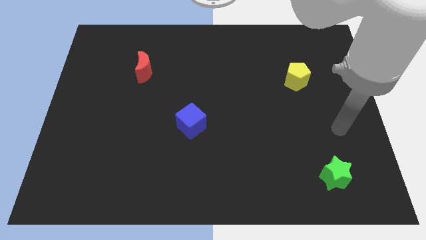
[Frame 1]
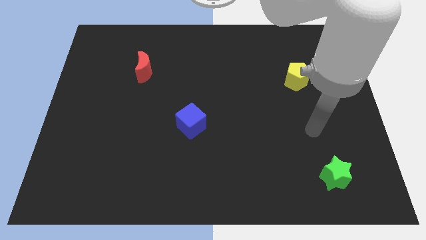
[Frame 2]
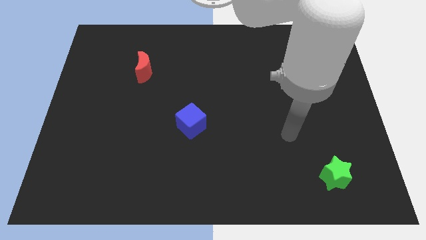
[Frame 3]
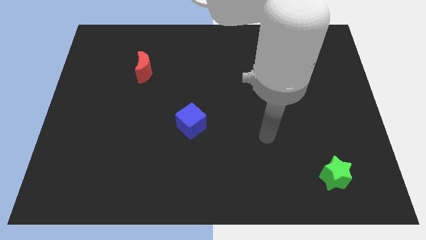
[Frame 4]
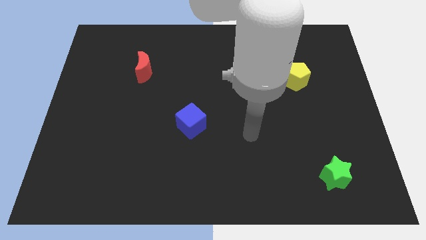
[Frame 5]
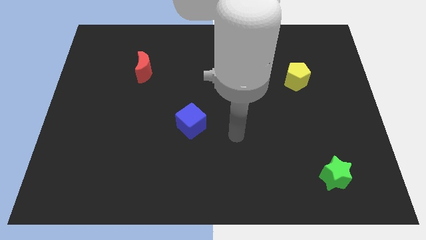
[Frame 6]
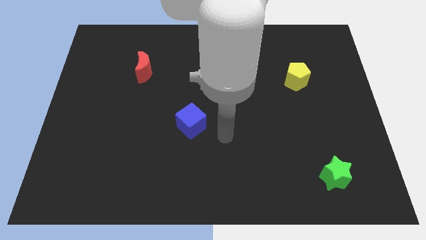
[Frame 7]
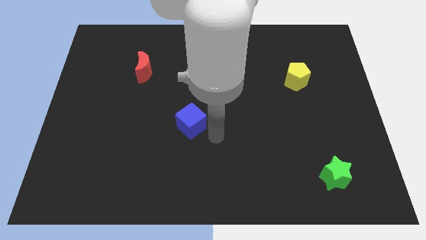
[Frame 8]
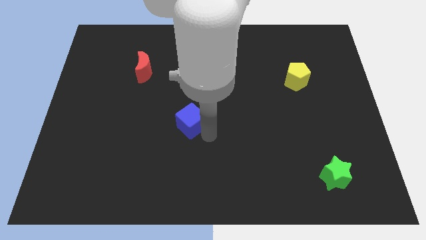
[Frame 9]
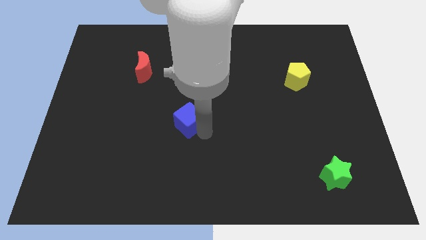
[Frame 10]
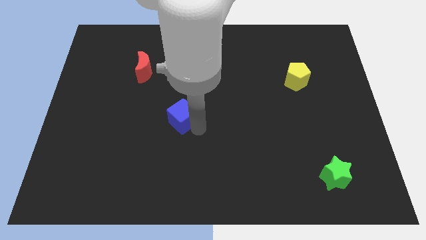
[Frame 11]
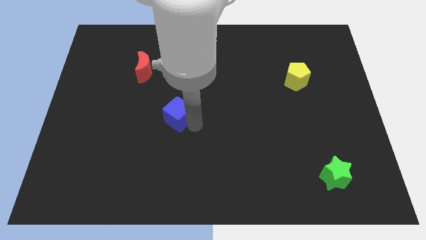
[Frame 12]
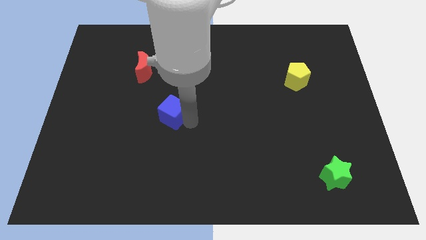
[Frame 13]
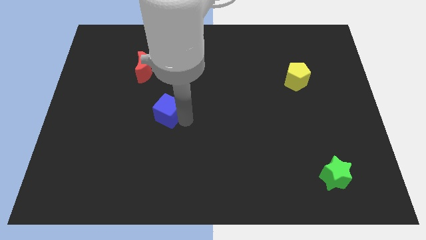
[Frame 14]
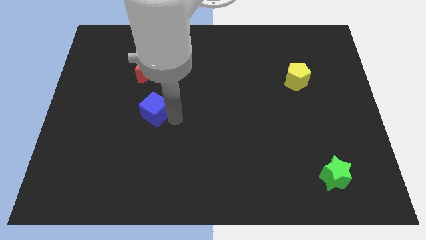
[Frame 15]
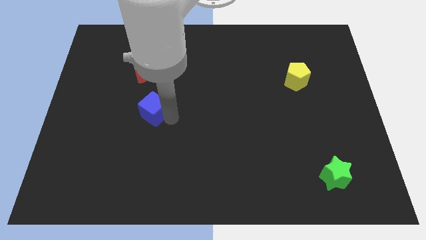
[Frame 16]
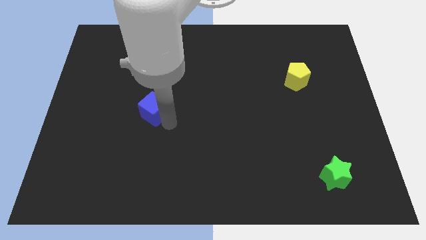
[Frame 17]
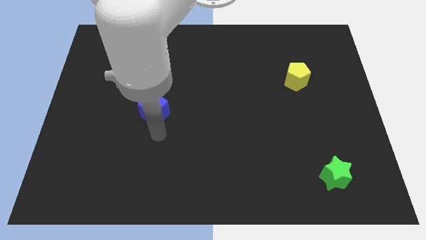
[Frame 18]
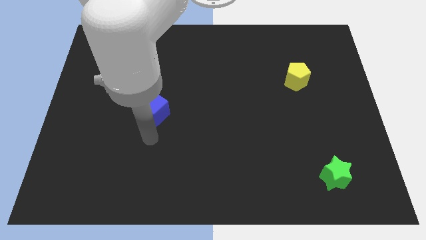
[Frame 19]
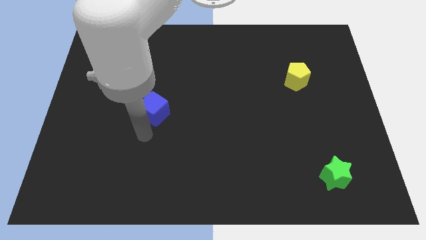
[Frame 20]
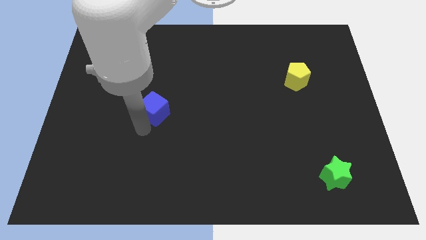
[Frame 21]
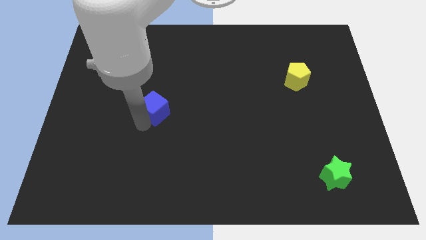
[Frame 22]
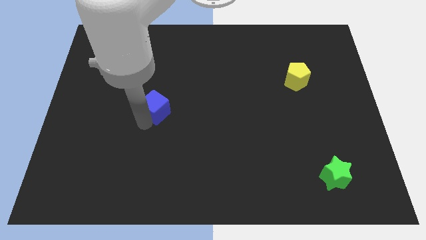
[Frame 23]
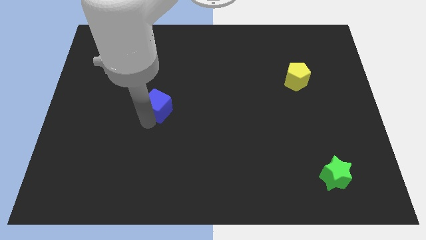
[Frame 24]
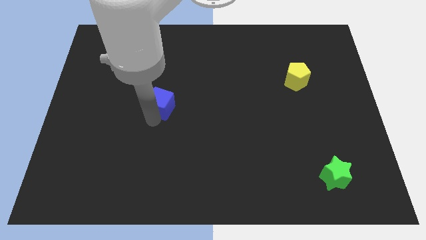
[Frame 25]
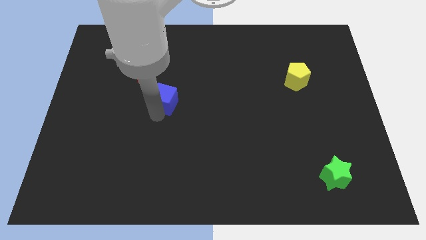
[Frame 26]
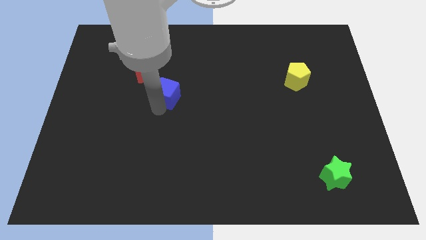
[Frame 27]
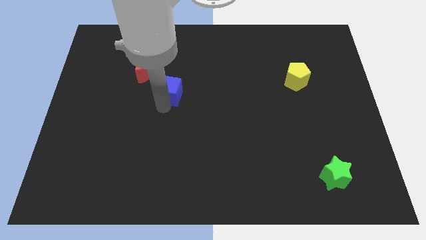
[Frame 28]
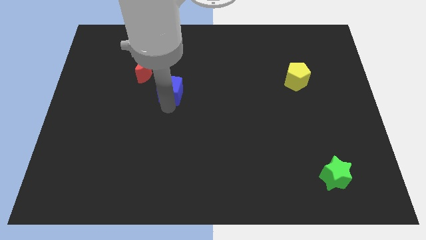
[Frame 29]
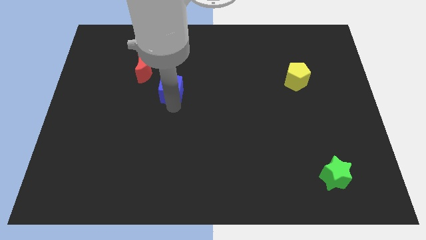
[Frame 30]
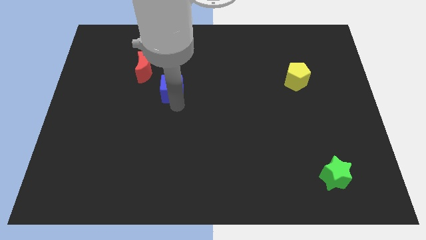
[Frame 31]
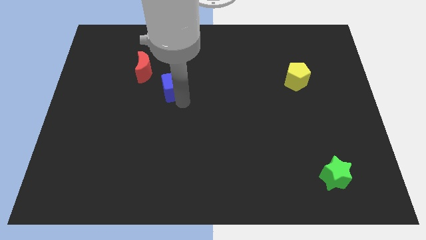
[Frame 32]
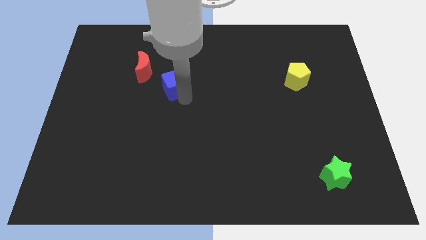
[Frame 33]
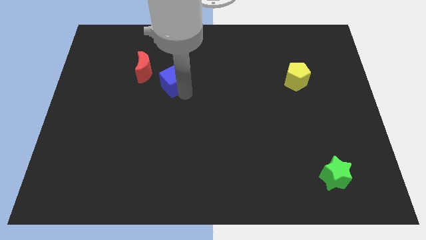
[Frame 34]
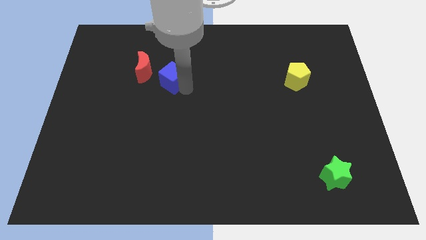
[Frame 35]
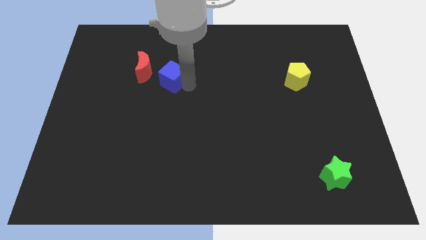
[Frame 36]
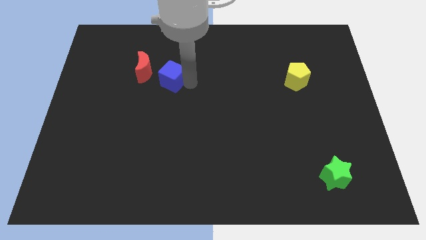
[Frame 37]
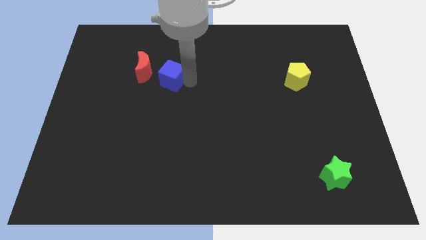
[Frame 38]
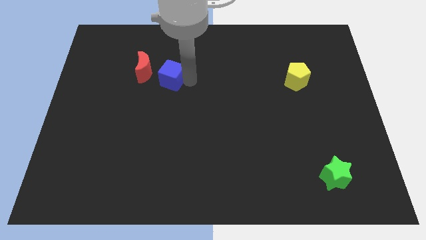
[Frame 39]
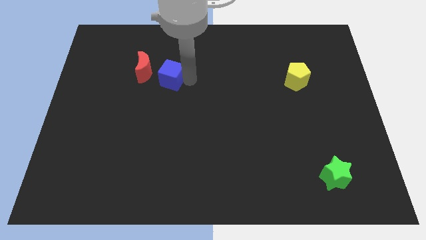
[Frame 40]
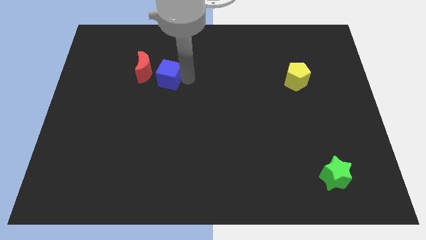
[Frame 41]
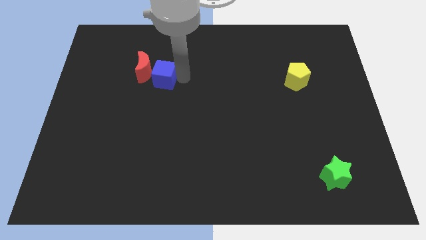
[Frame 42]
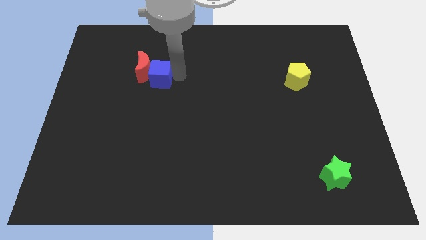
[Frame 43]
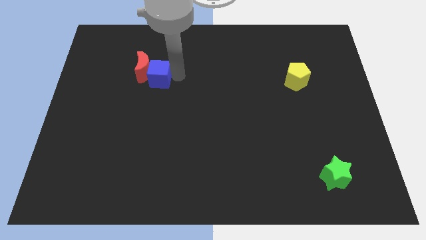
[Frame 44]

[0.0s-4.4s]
move the blue cube next to the red block

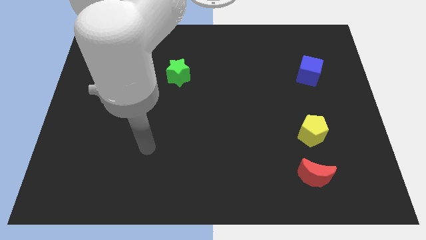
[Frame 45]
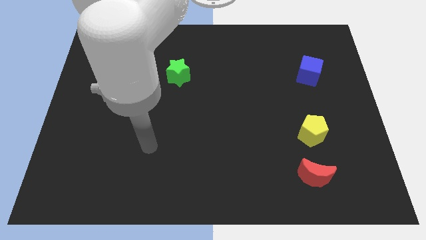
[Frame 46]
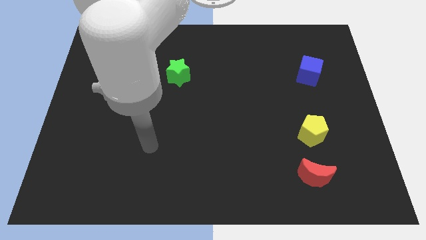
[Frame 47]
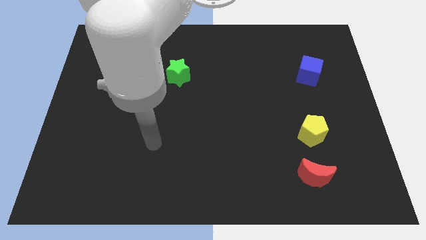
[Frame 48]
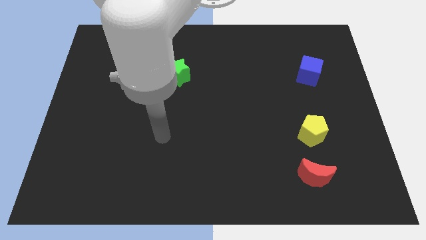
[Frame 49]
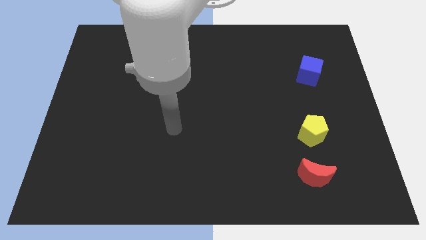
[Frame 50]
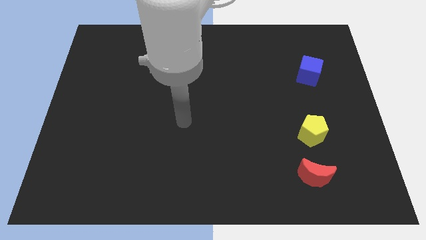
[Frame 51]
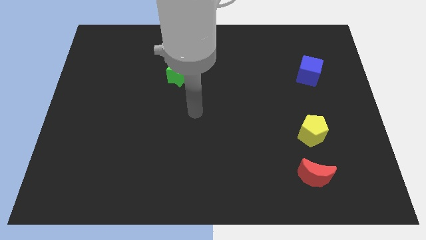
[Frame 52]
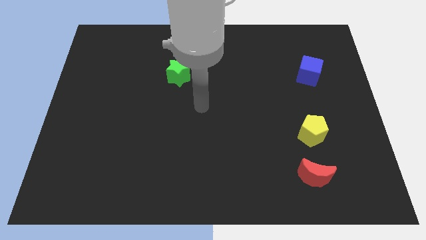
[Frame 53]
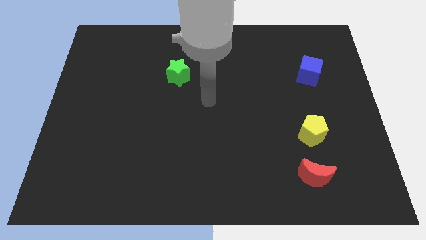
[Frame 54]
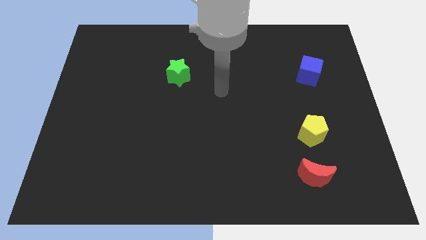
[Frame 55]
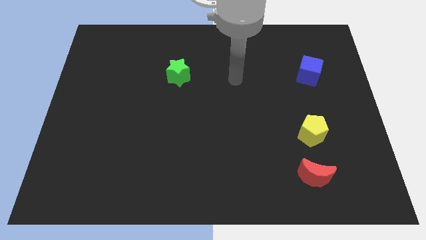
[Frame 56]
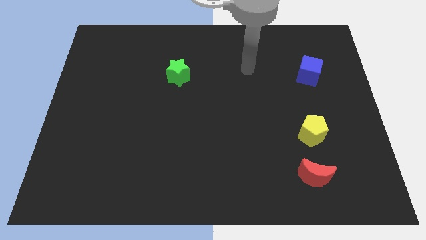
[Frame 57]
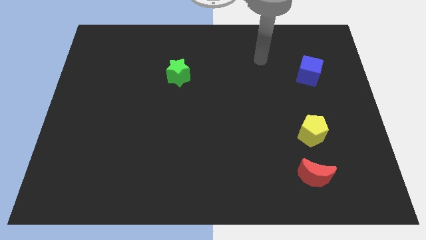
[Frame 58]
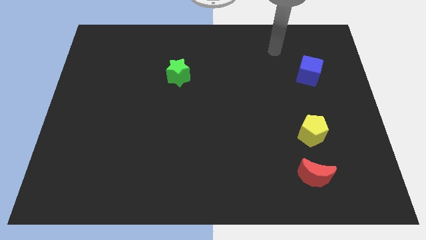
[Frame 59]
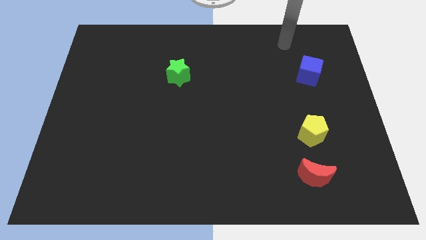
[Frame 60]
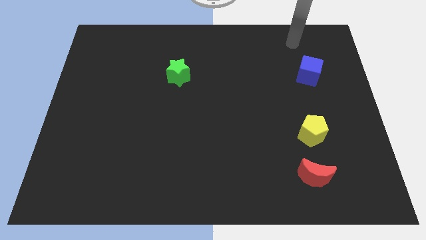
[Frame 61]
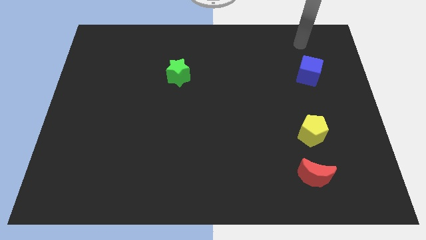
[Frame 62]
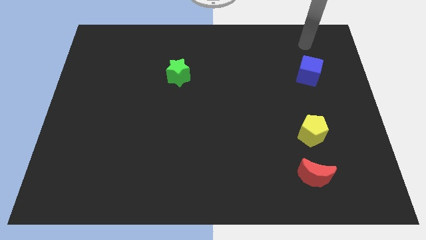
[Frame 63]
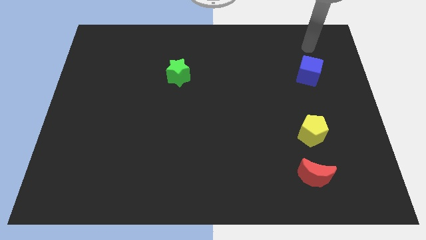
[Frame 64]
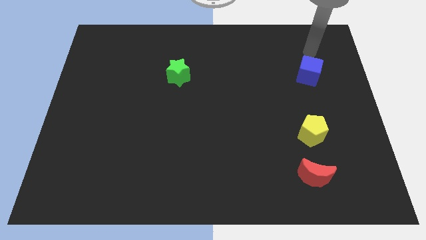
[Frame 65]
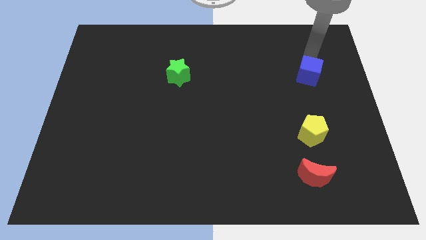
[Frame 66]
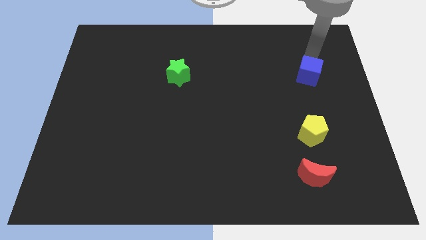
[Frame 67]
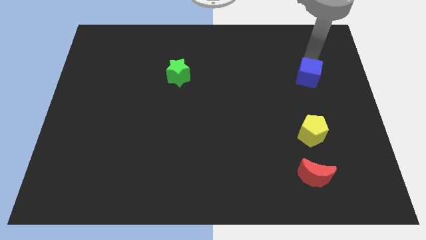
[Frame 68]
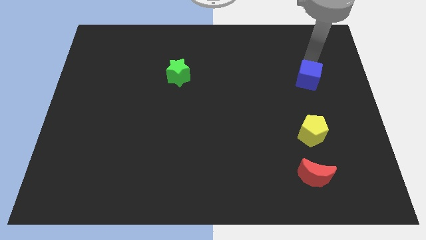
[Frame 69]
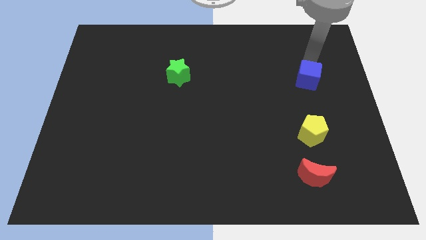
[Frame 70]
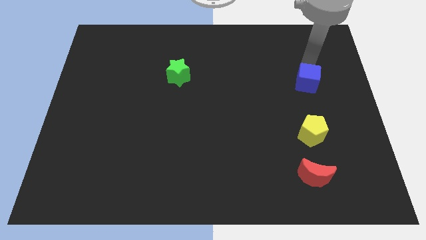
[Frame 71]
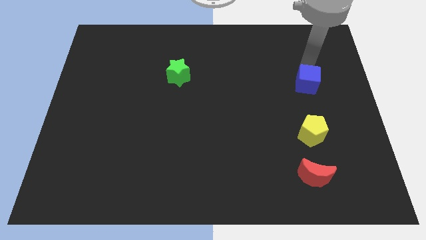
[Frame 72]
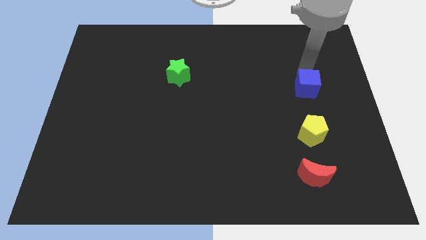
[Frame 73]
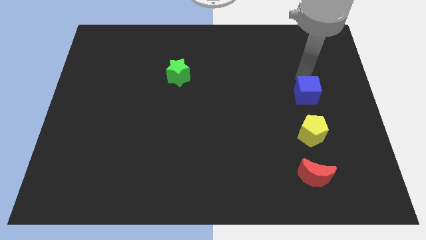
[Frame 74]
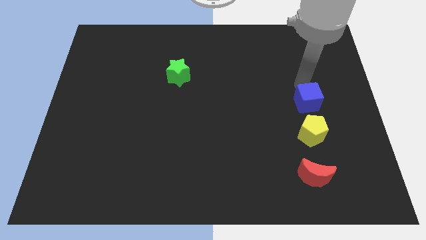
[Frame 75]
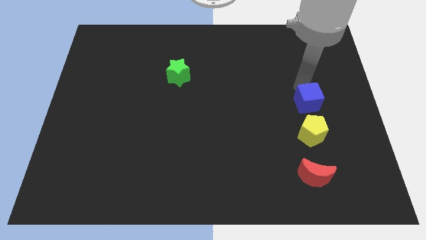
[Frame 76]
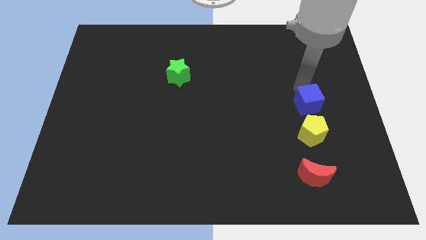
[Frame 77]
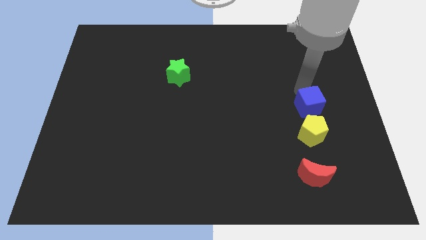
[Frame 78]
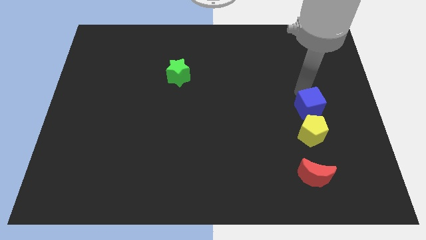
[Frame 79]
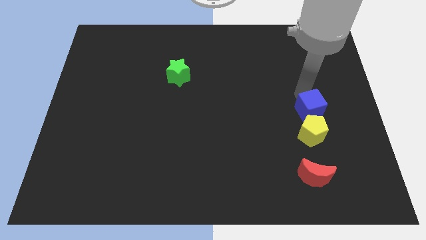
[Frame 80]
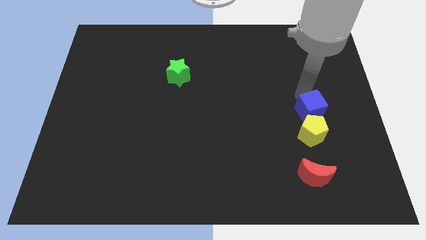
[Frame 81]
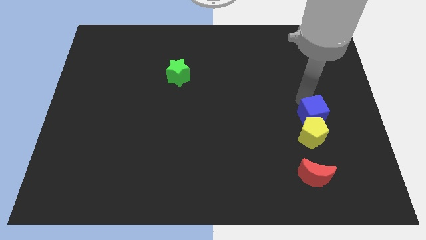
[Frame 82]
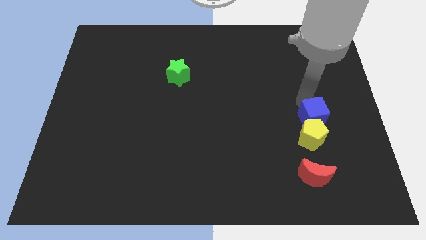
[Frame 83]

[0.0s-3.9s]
slide the blue block to the pentagon
